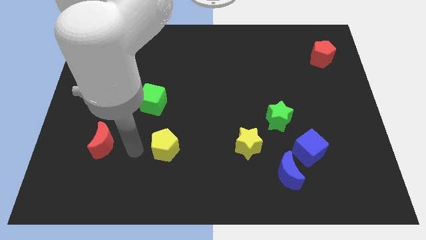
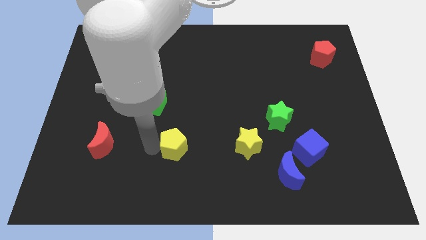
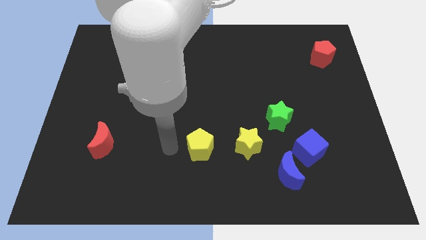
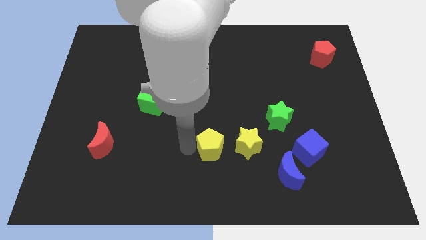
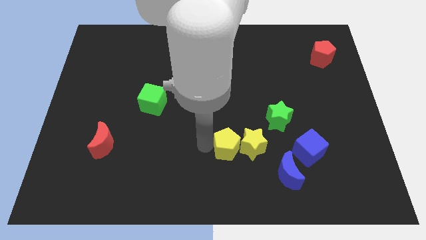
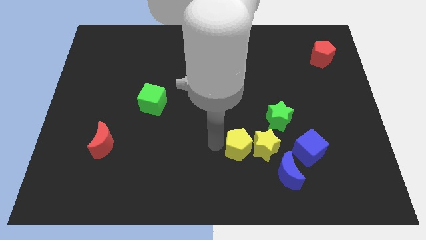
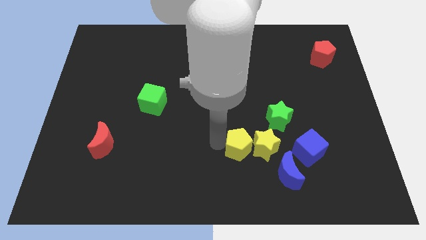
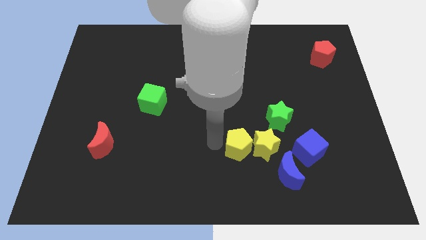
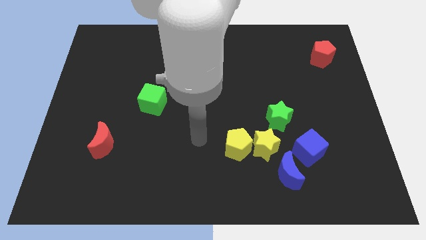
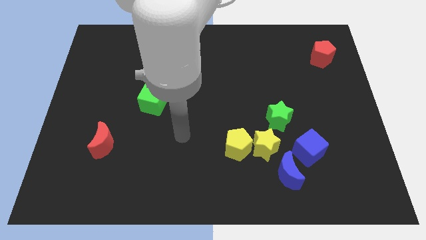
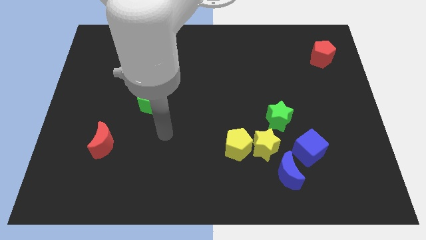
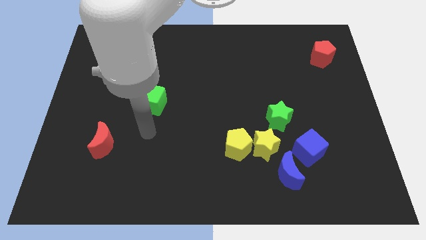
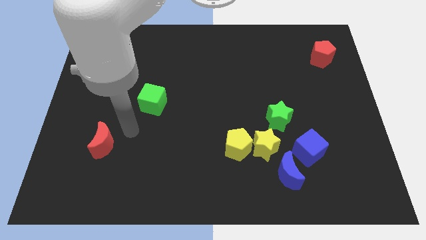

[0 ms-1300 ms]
push the yellow pentagon to the left of the yellow star

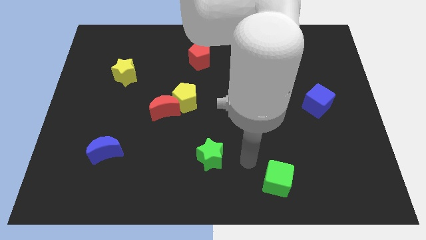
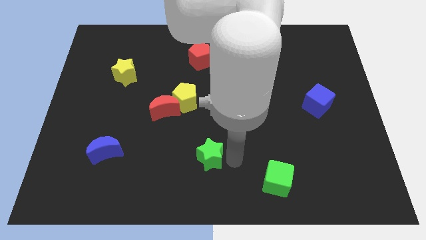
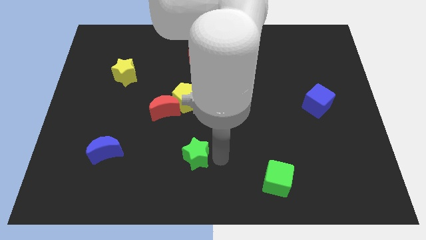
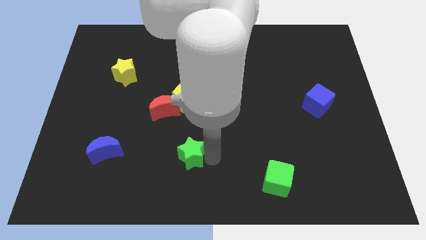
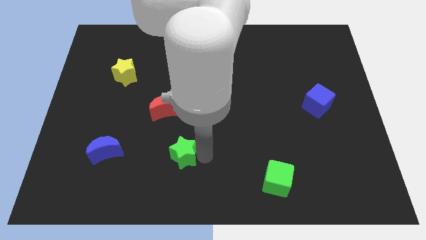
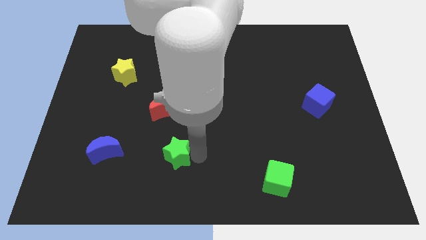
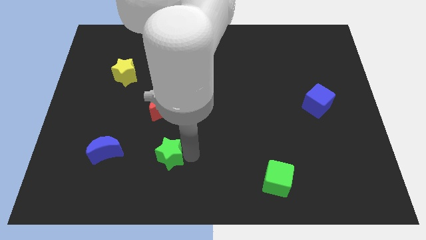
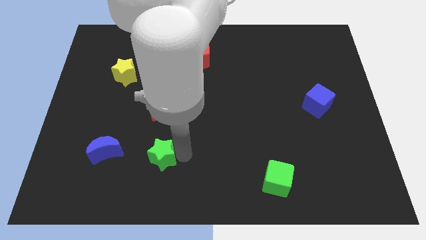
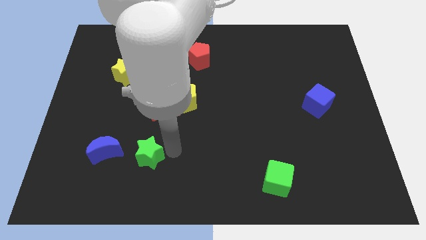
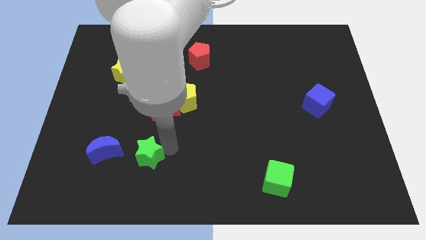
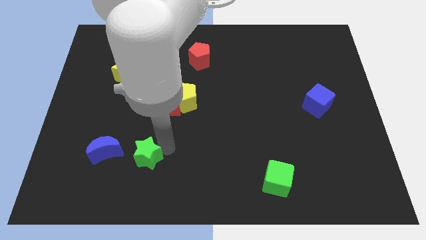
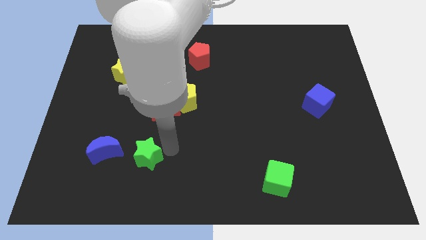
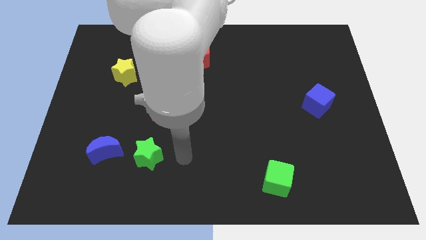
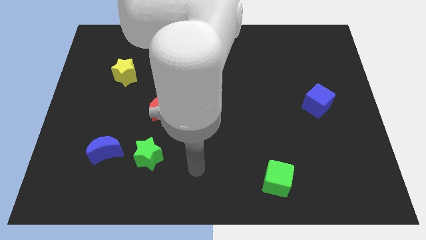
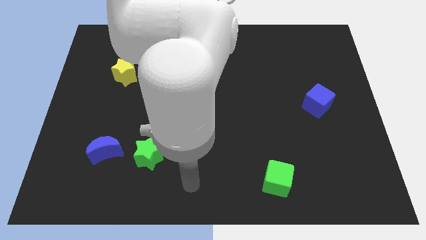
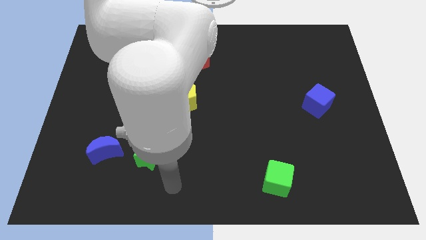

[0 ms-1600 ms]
move the green star close to the blue crescent

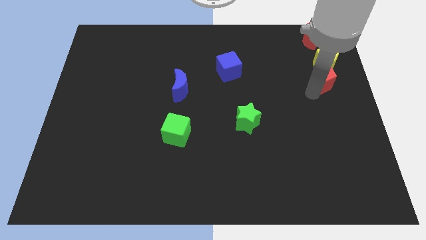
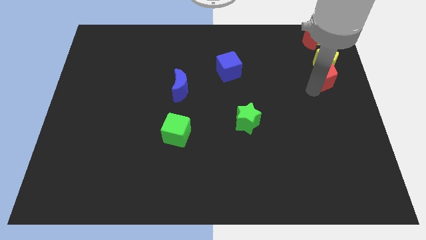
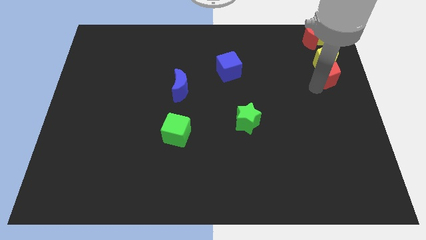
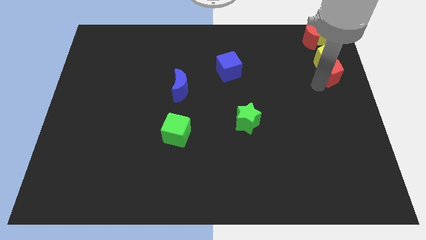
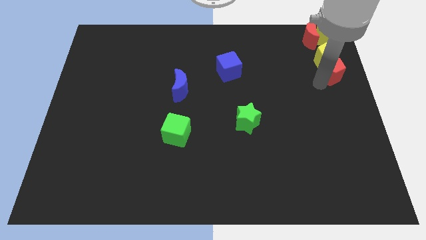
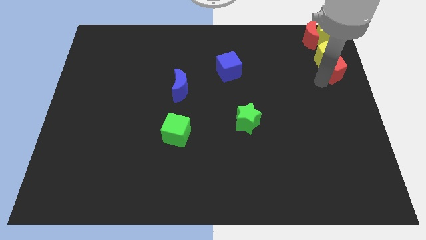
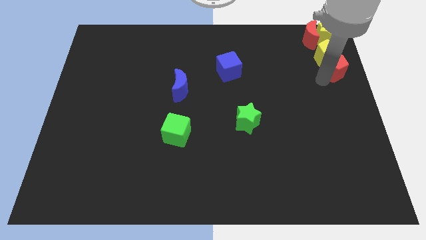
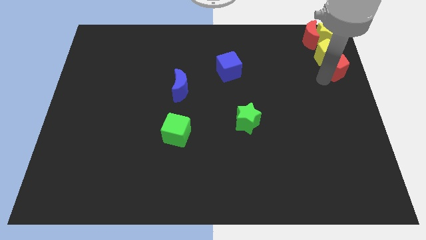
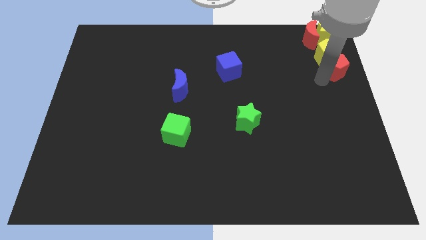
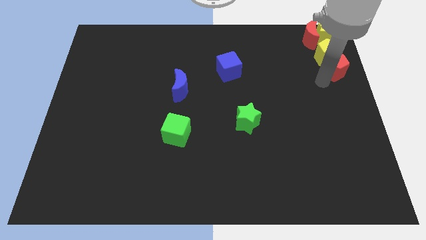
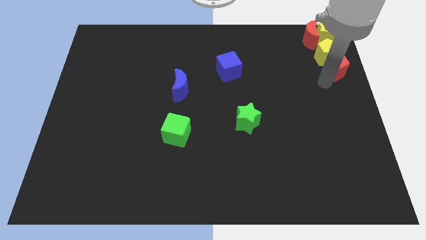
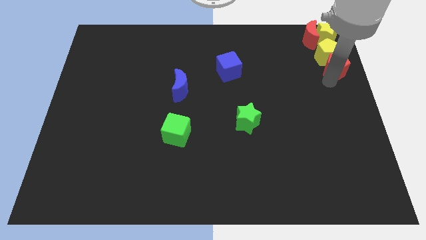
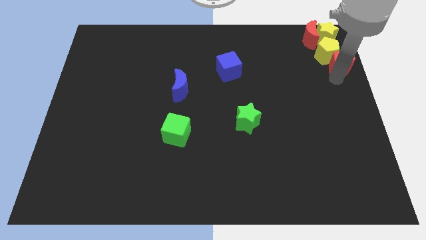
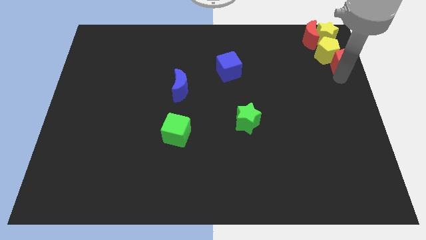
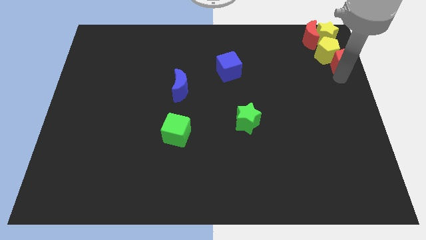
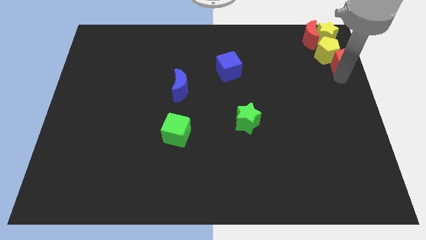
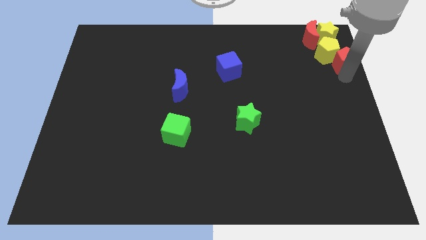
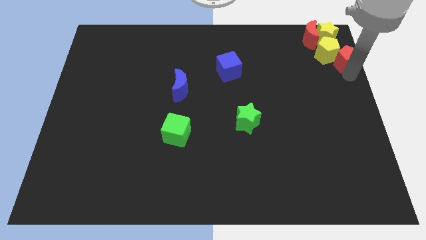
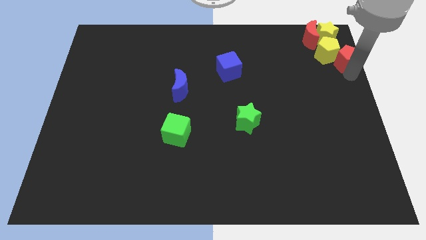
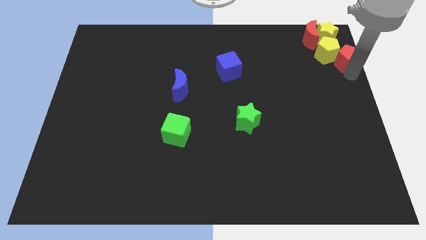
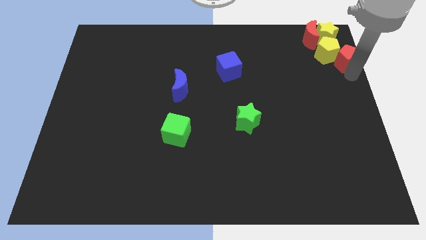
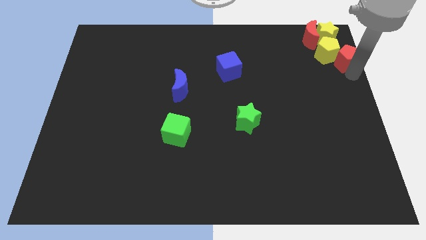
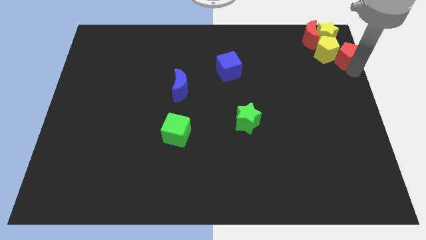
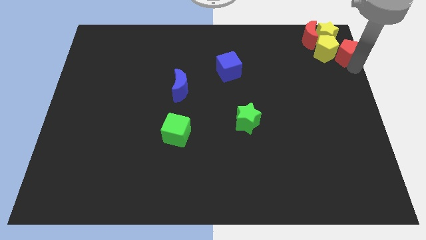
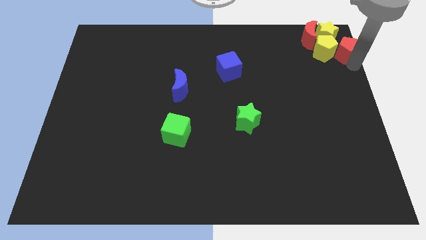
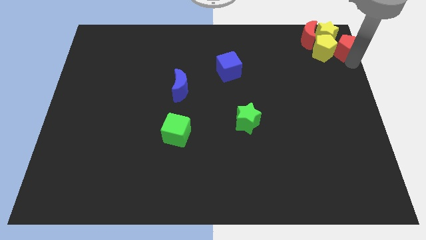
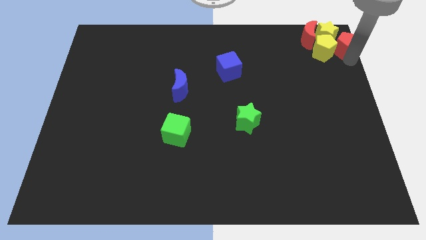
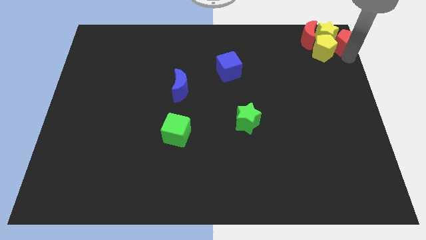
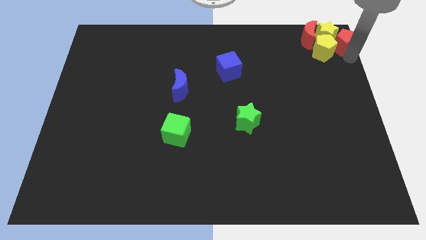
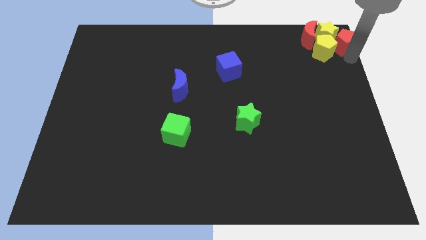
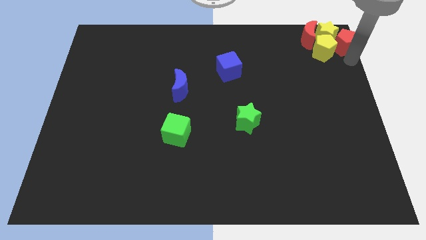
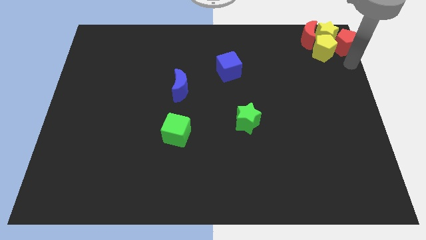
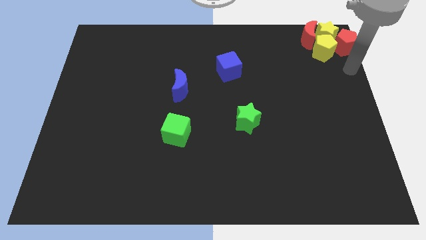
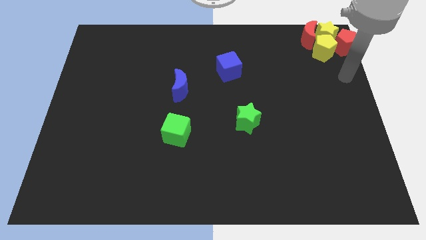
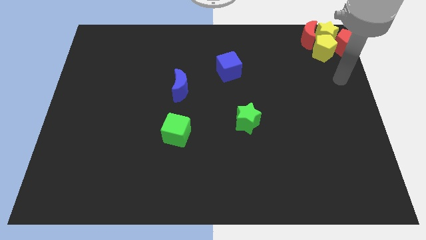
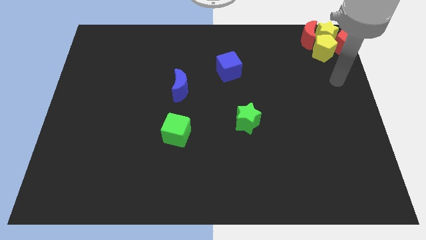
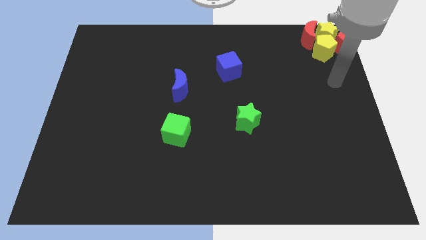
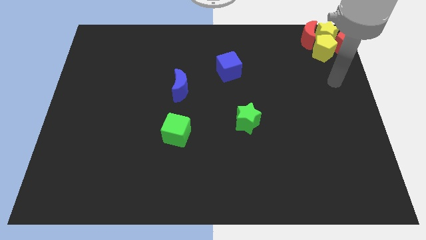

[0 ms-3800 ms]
place all the yellow and red blocks to the top right side of the board

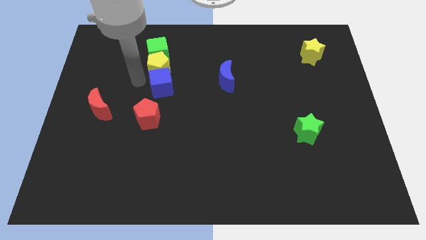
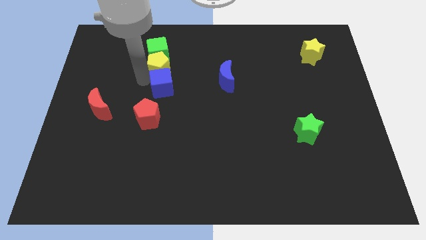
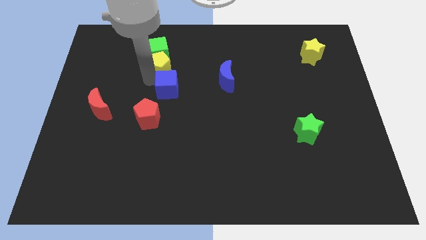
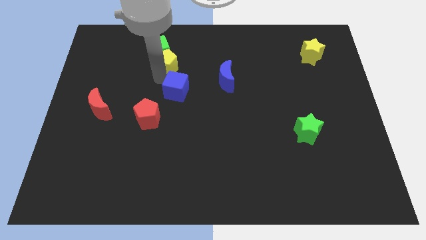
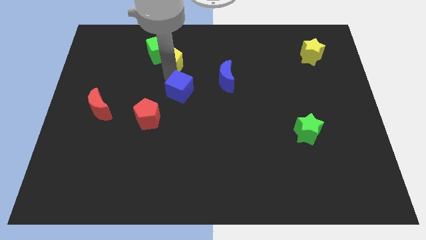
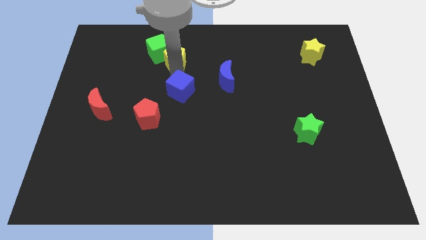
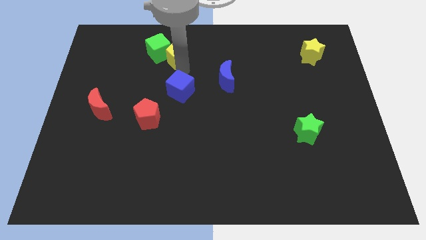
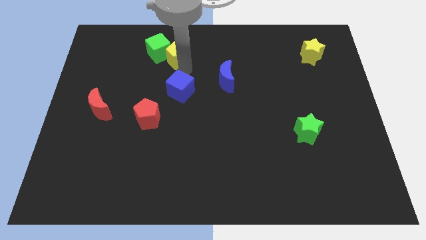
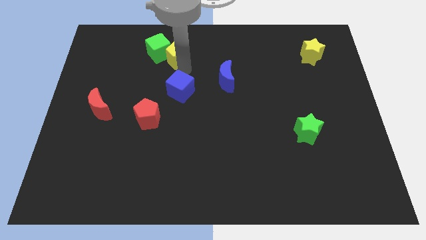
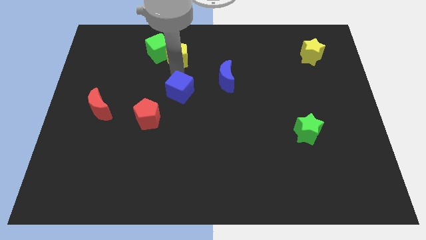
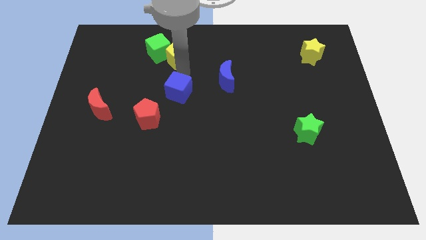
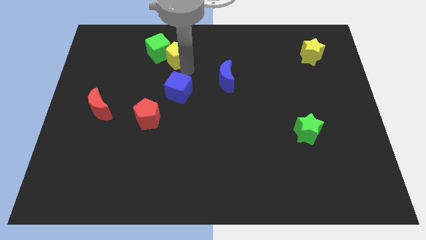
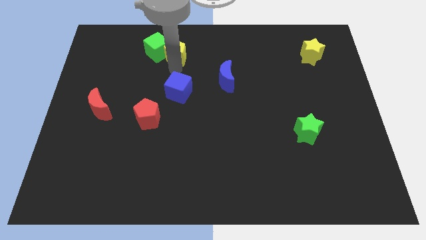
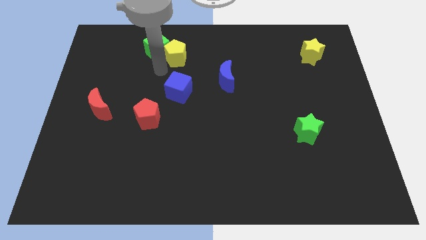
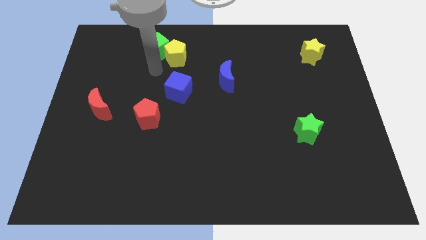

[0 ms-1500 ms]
separate yellow pentagon from the blue cube

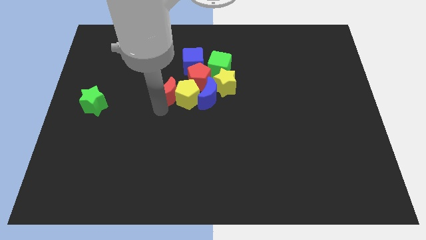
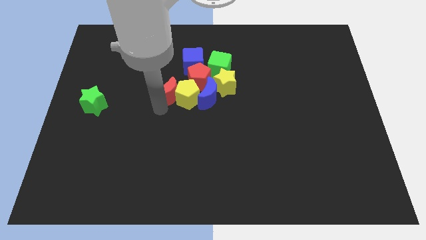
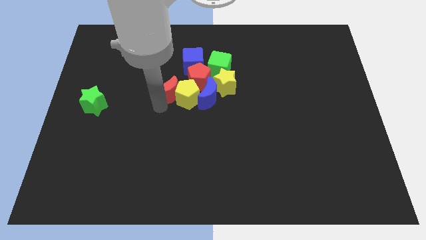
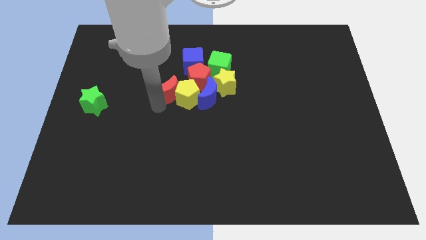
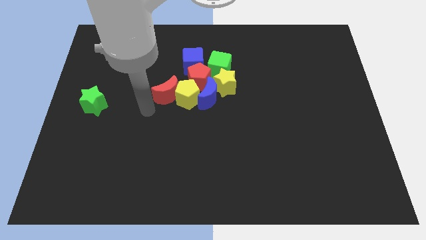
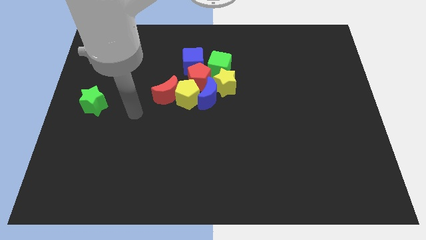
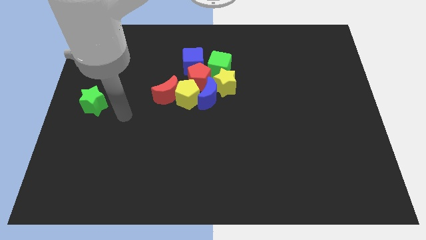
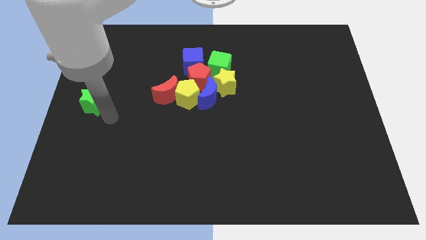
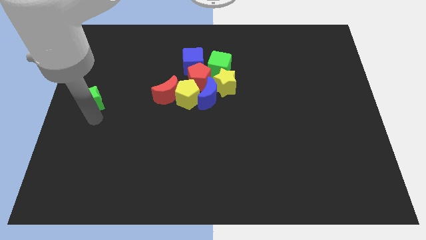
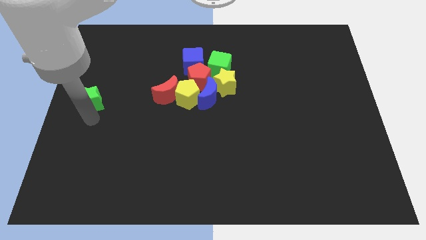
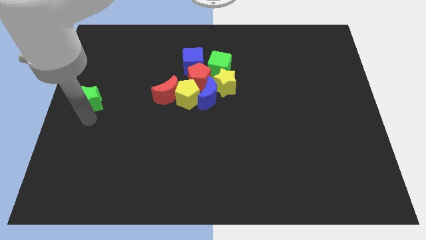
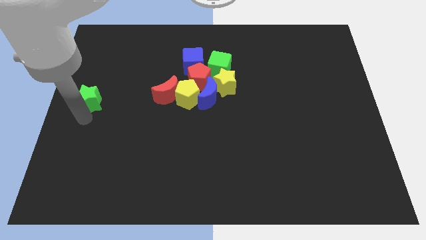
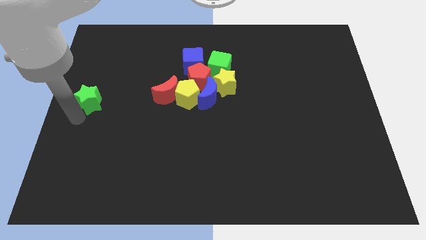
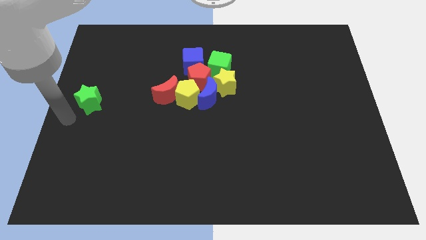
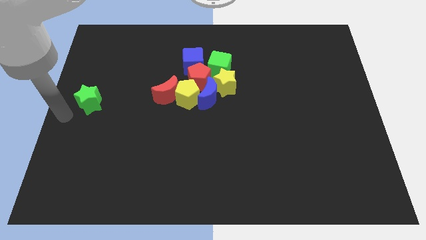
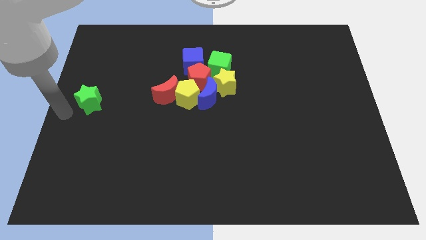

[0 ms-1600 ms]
move your arm away from the red crescent
